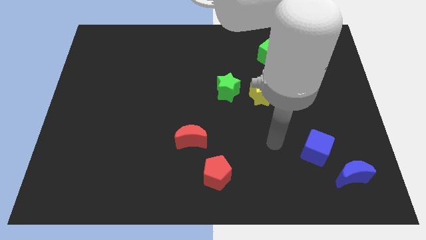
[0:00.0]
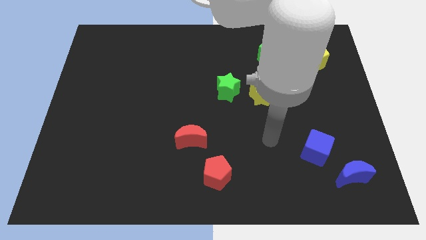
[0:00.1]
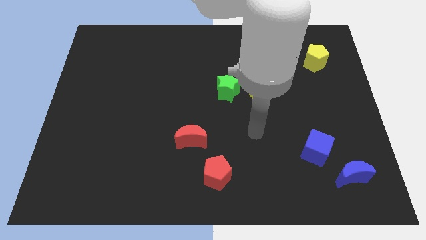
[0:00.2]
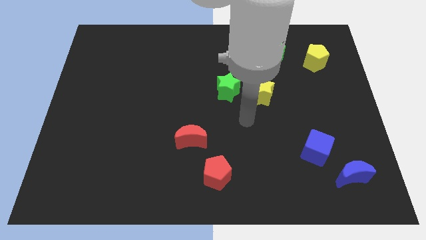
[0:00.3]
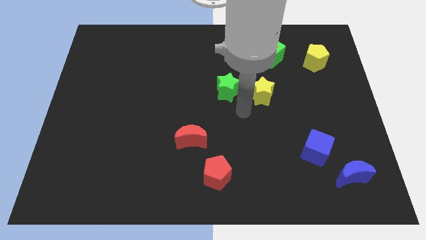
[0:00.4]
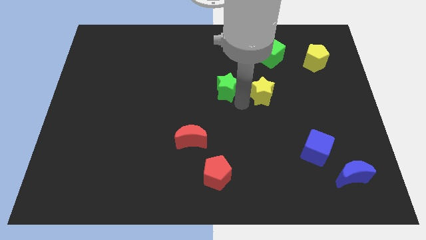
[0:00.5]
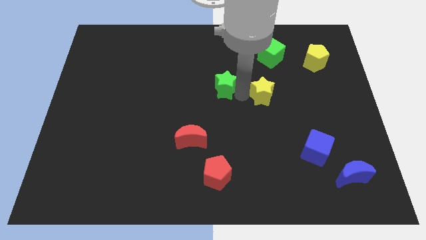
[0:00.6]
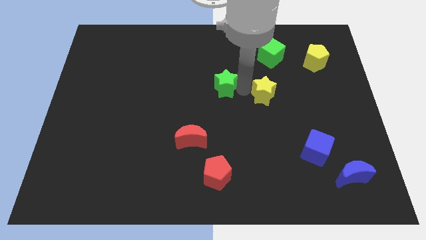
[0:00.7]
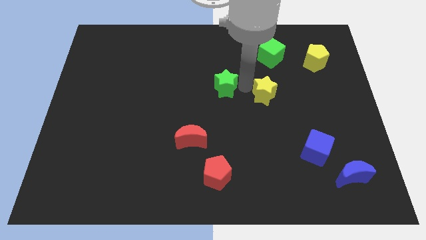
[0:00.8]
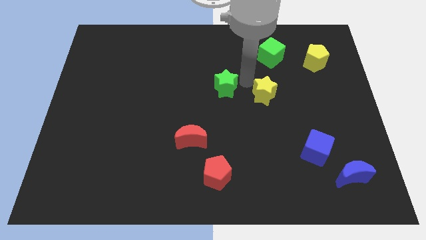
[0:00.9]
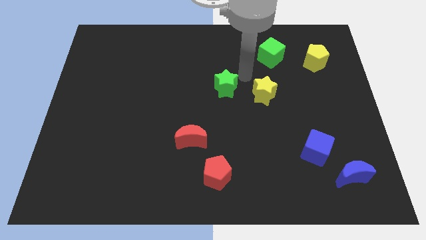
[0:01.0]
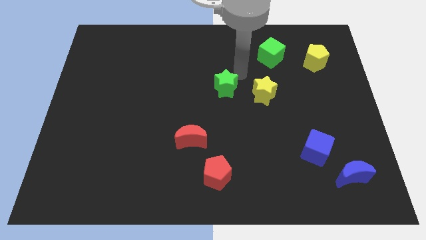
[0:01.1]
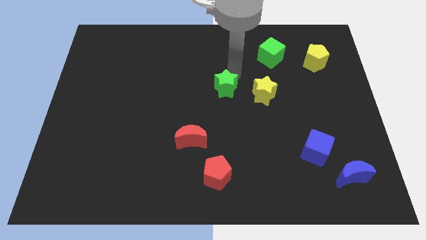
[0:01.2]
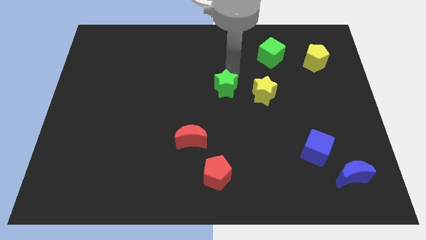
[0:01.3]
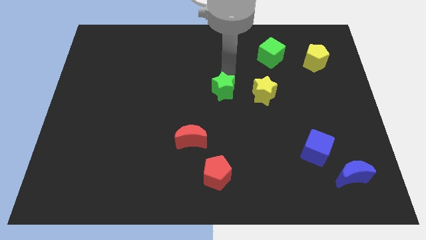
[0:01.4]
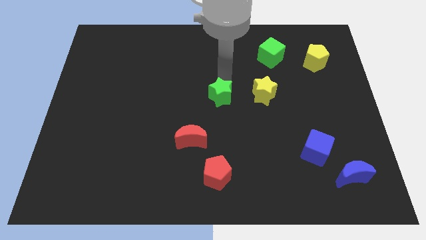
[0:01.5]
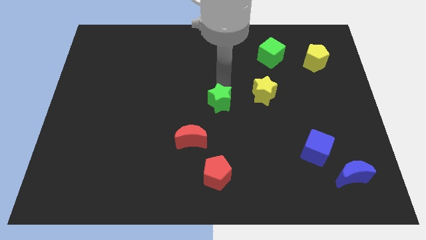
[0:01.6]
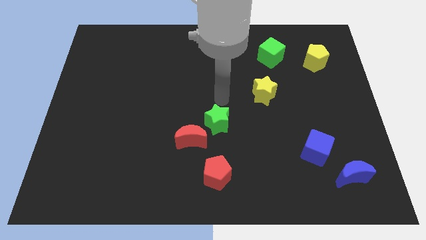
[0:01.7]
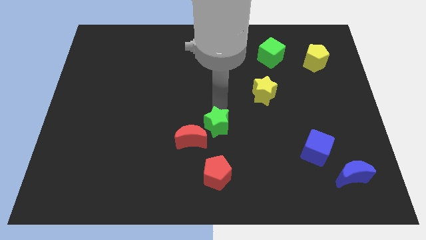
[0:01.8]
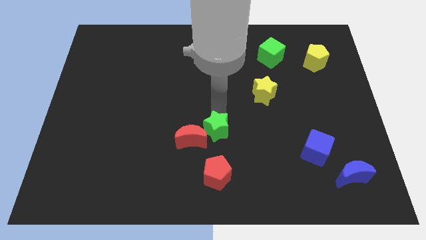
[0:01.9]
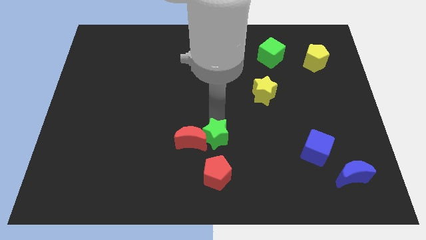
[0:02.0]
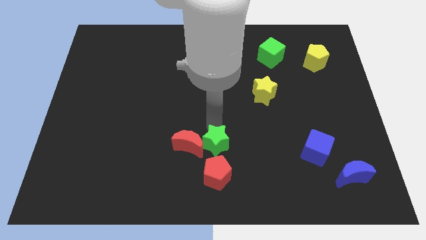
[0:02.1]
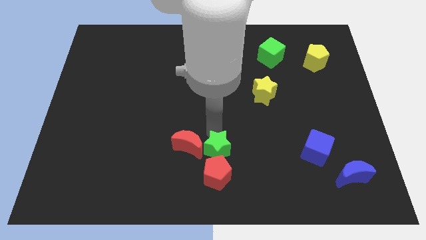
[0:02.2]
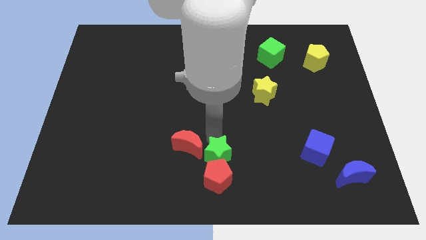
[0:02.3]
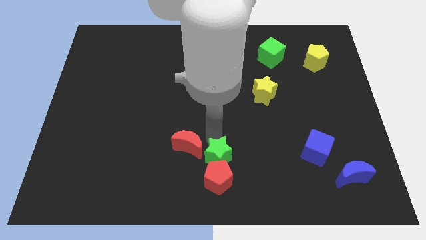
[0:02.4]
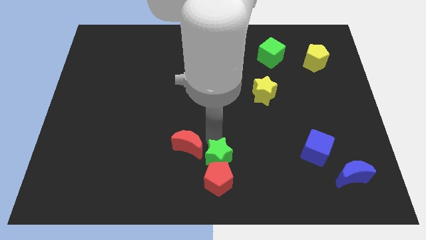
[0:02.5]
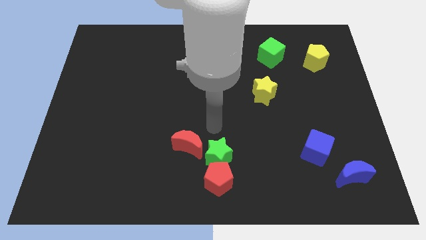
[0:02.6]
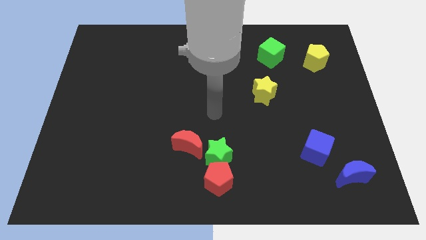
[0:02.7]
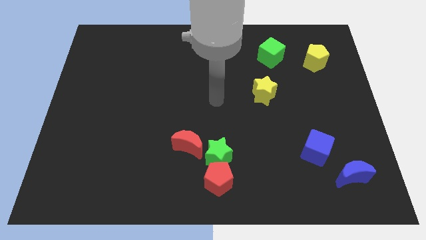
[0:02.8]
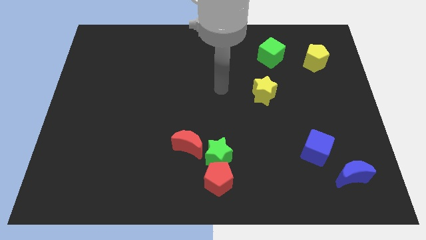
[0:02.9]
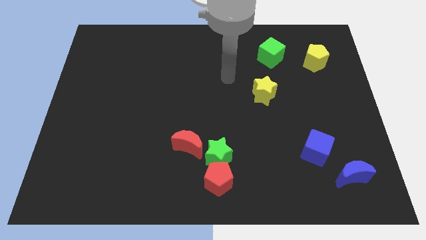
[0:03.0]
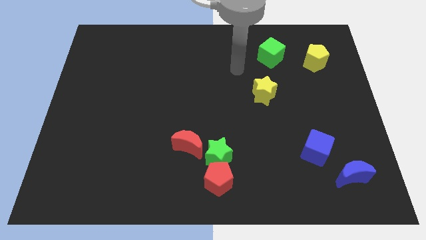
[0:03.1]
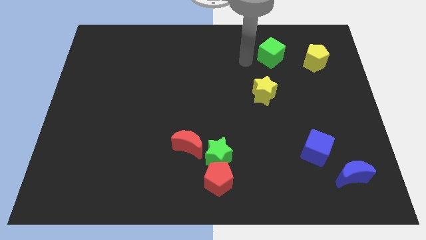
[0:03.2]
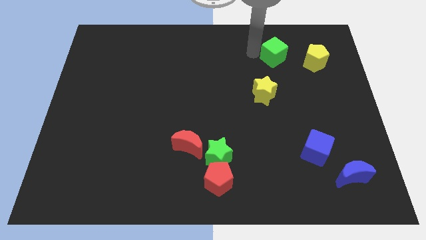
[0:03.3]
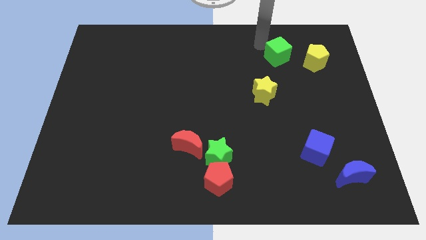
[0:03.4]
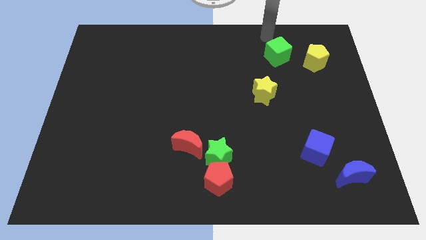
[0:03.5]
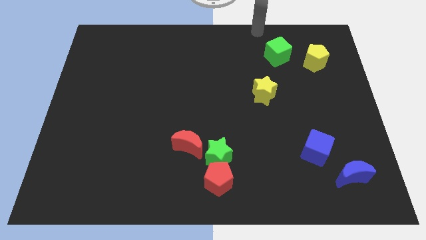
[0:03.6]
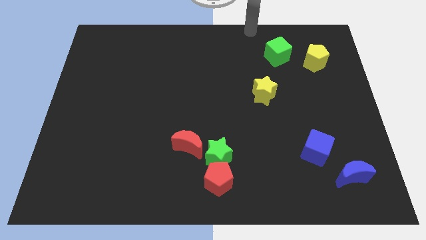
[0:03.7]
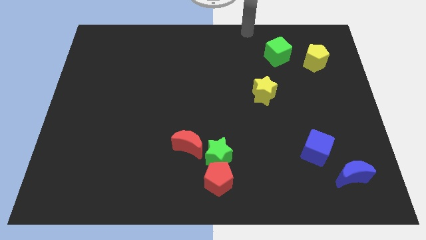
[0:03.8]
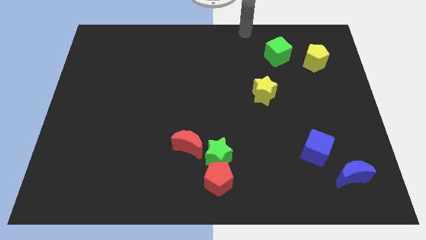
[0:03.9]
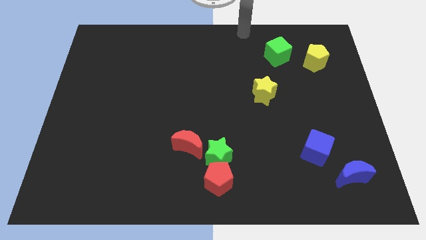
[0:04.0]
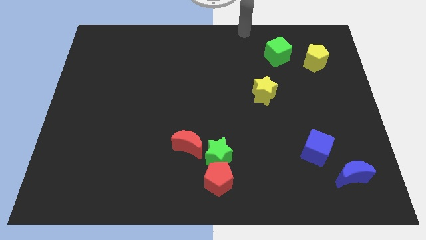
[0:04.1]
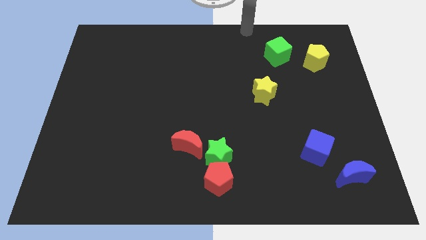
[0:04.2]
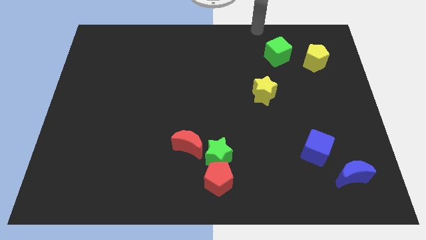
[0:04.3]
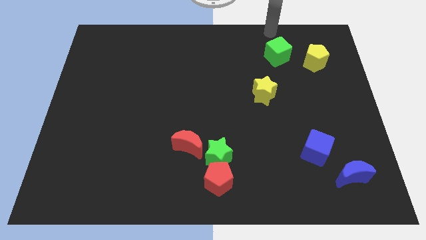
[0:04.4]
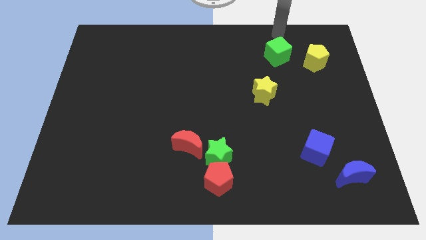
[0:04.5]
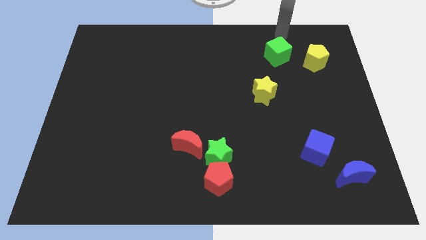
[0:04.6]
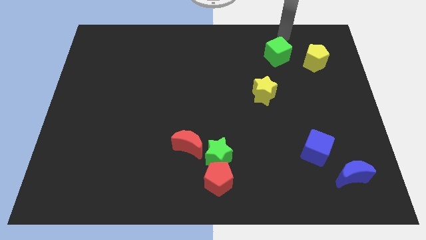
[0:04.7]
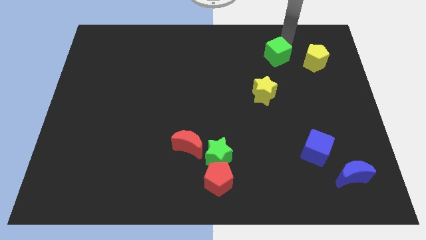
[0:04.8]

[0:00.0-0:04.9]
move the green star slightly in between the red block

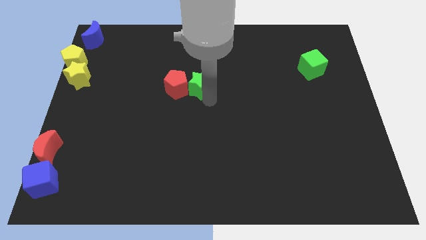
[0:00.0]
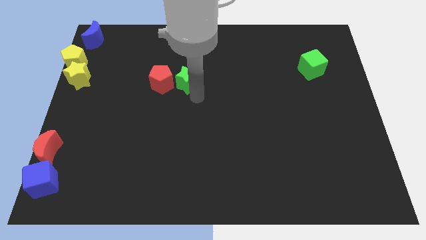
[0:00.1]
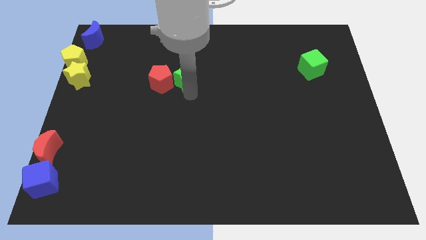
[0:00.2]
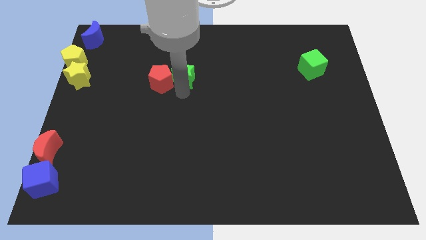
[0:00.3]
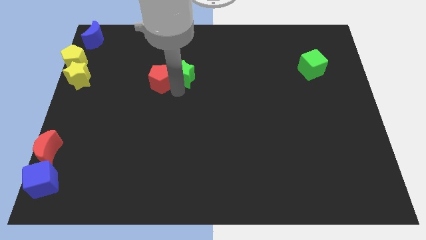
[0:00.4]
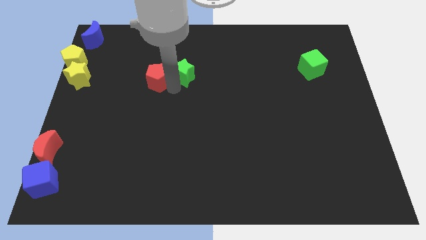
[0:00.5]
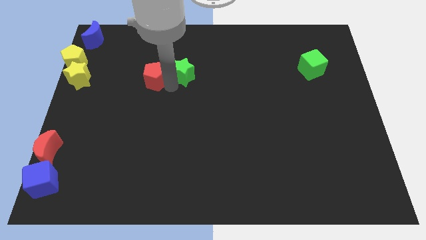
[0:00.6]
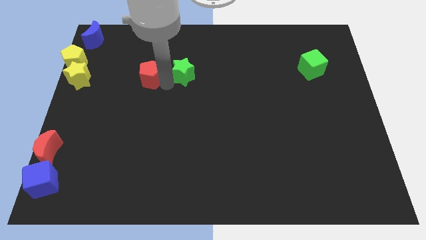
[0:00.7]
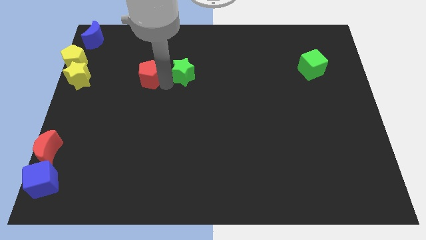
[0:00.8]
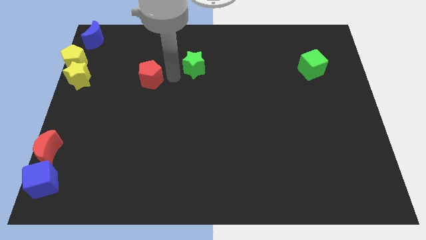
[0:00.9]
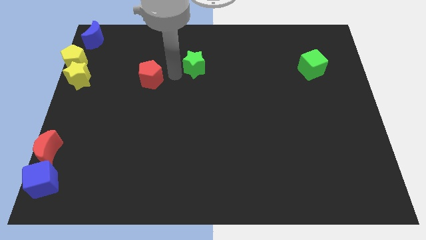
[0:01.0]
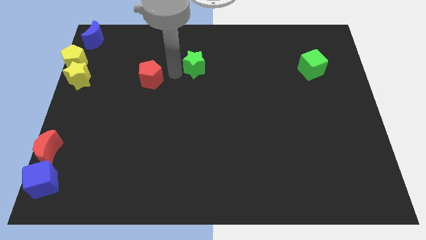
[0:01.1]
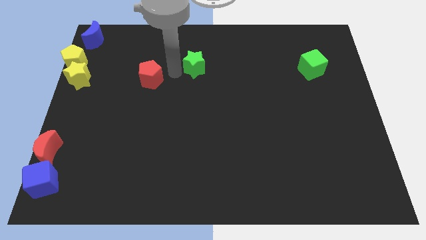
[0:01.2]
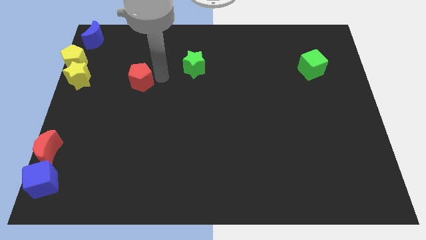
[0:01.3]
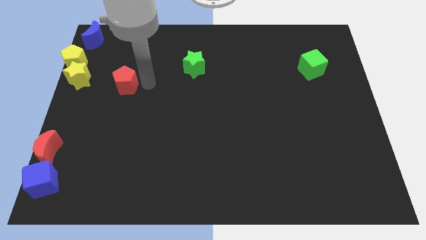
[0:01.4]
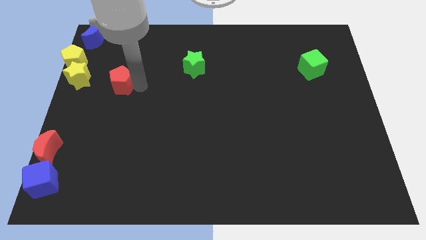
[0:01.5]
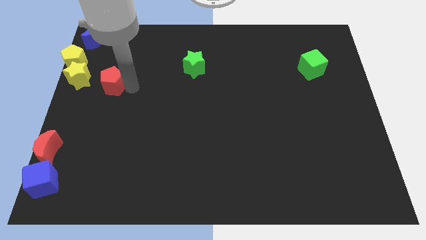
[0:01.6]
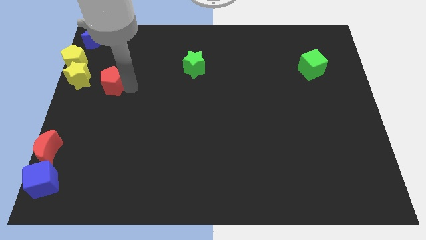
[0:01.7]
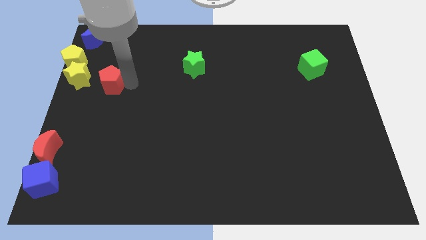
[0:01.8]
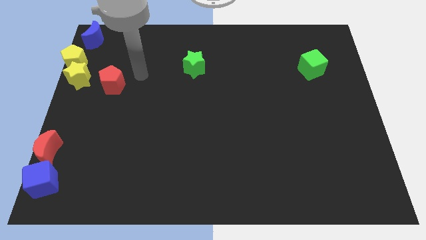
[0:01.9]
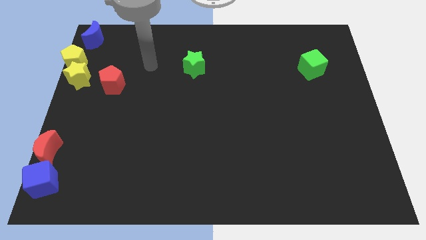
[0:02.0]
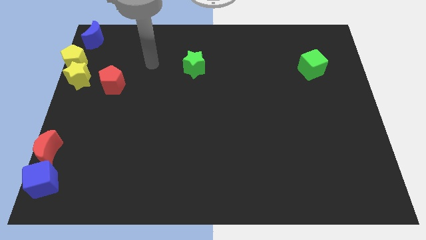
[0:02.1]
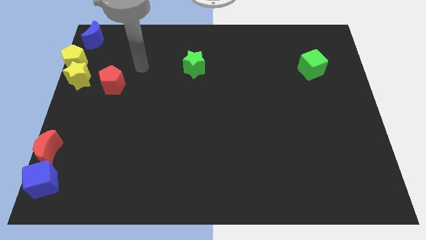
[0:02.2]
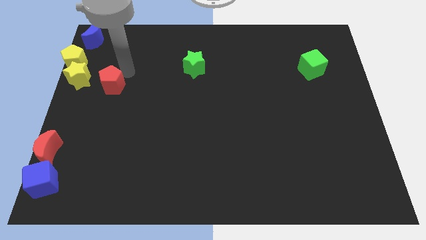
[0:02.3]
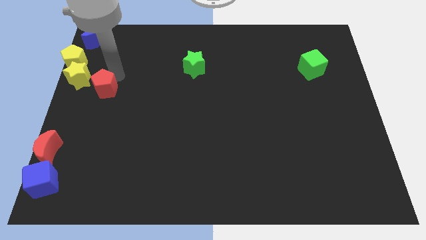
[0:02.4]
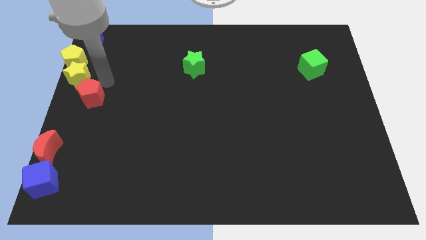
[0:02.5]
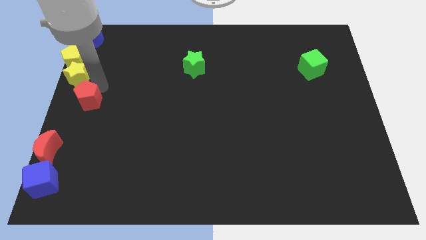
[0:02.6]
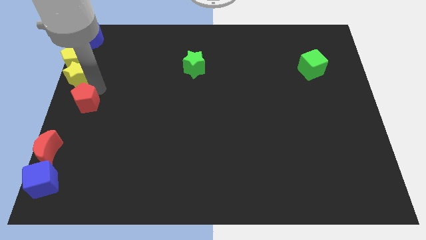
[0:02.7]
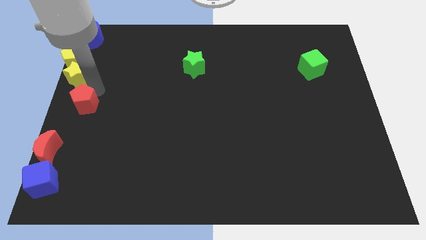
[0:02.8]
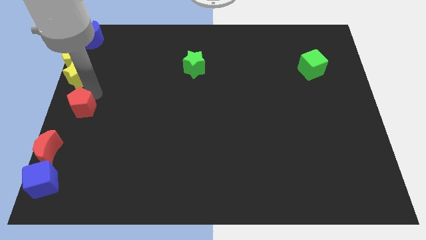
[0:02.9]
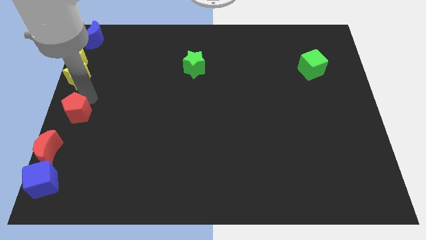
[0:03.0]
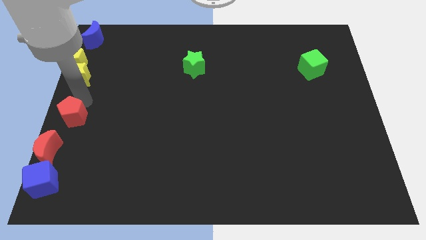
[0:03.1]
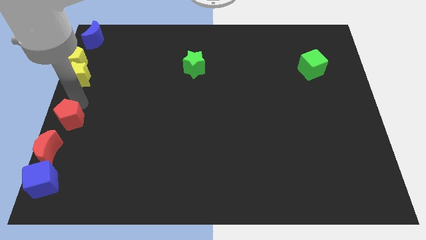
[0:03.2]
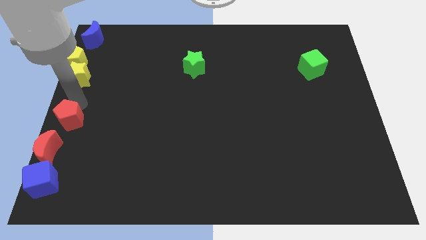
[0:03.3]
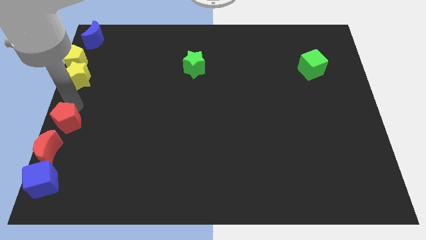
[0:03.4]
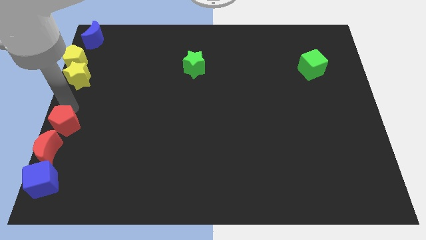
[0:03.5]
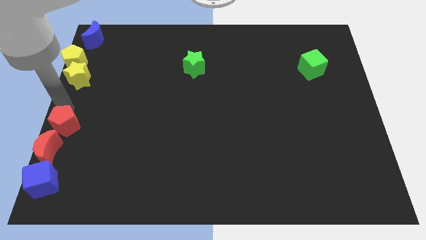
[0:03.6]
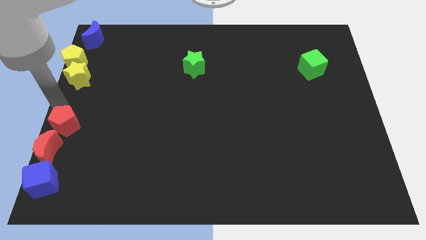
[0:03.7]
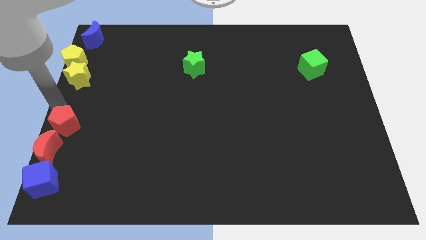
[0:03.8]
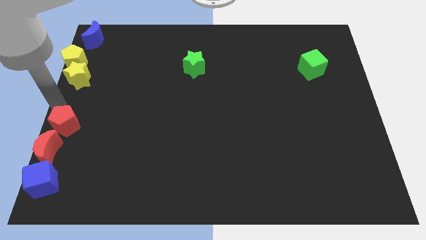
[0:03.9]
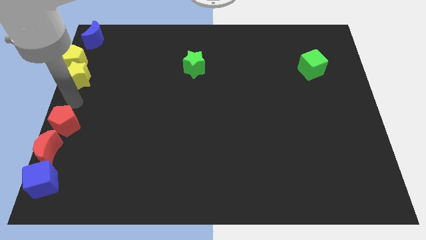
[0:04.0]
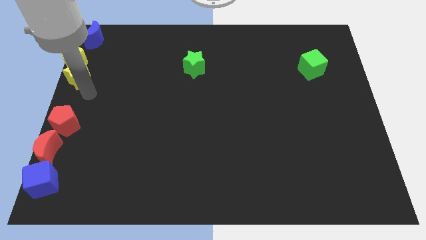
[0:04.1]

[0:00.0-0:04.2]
push red pentagon towards red moon
